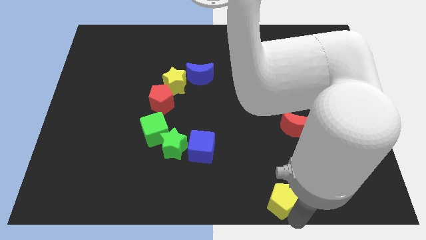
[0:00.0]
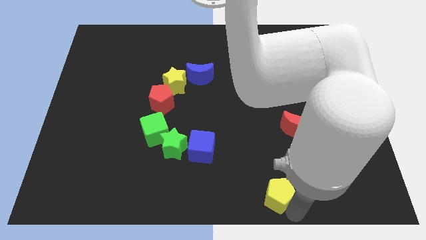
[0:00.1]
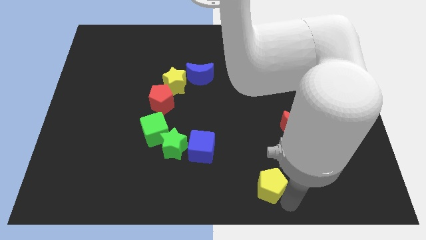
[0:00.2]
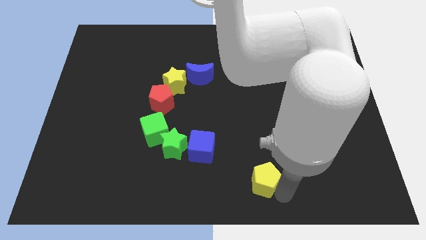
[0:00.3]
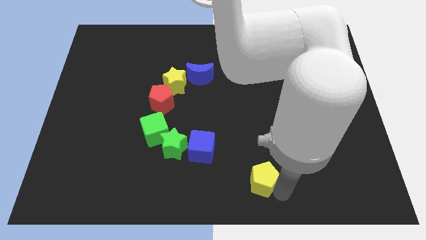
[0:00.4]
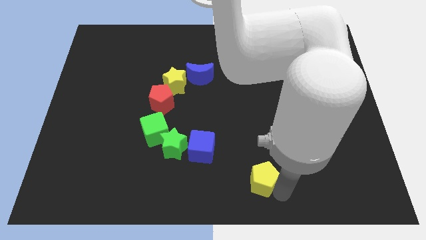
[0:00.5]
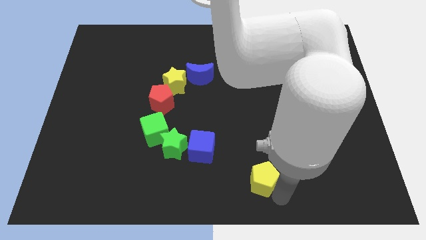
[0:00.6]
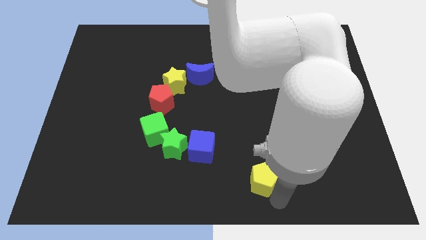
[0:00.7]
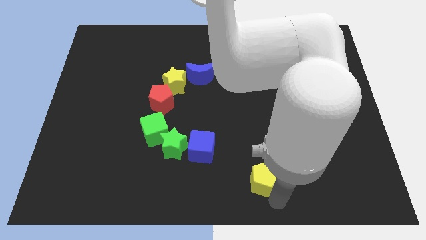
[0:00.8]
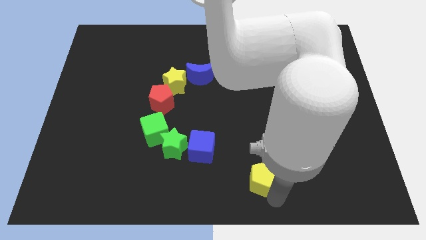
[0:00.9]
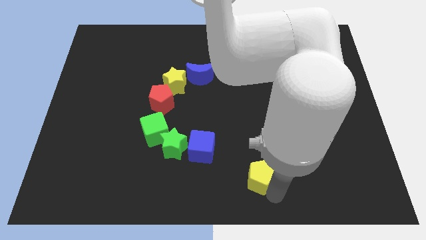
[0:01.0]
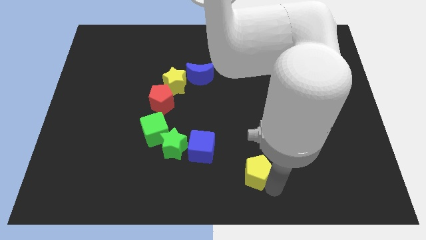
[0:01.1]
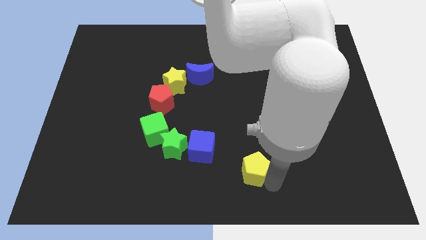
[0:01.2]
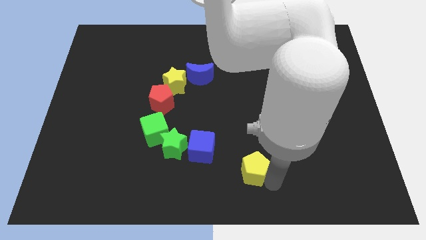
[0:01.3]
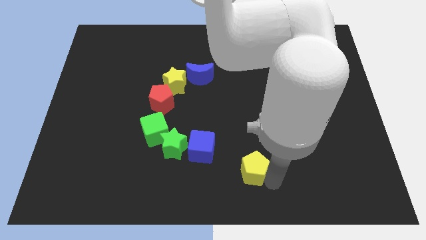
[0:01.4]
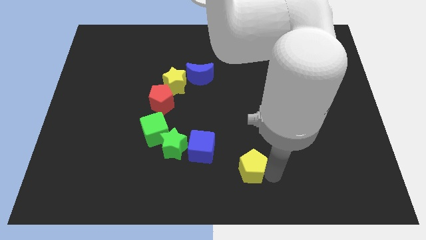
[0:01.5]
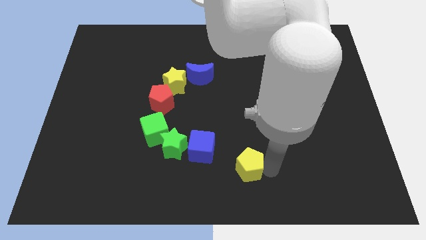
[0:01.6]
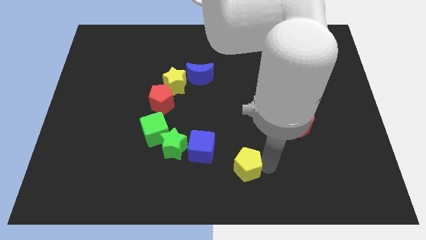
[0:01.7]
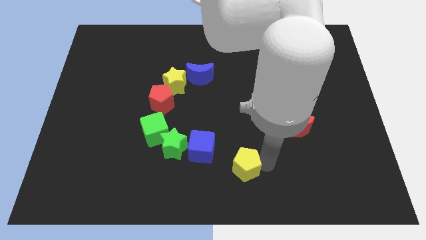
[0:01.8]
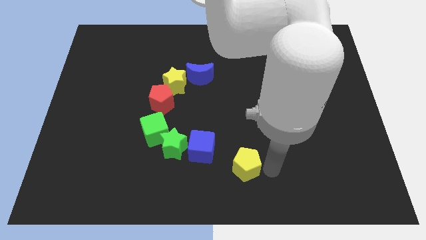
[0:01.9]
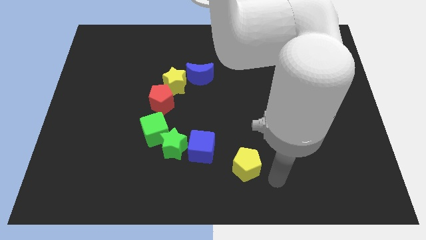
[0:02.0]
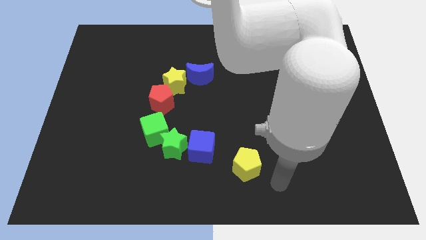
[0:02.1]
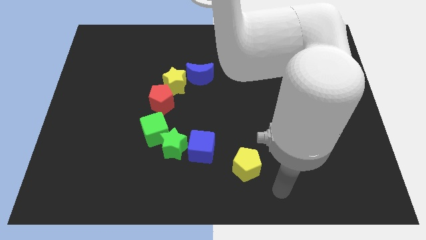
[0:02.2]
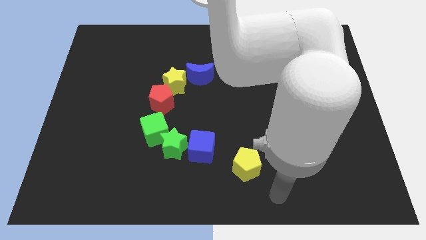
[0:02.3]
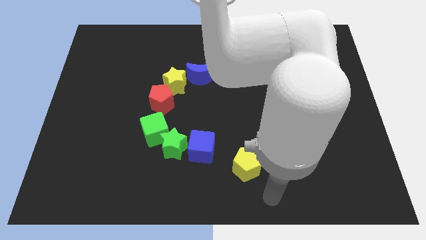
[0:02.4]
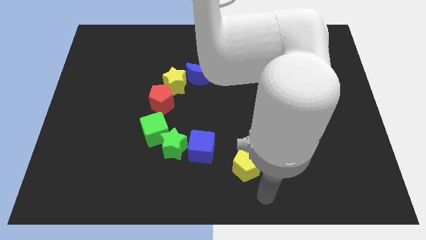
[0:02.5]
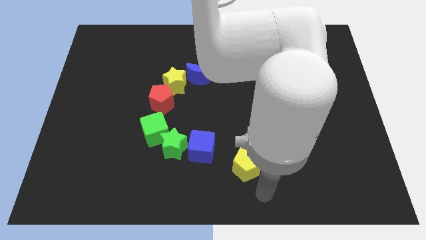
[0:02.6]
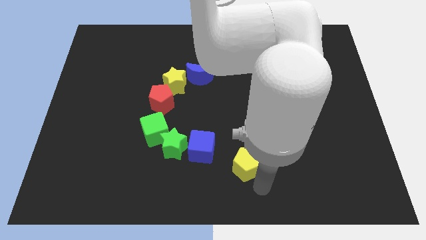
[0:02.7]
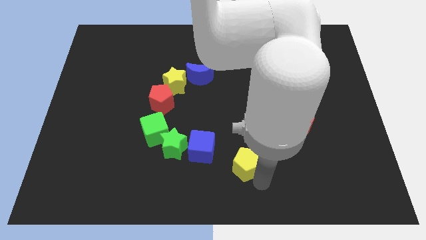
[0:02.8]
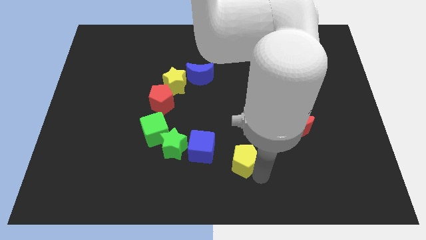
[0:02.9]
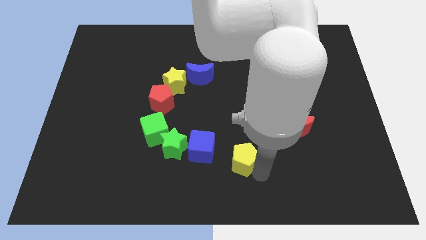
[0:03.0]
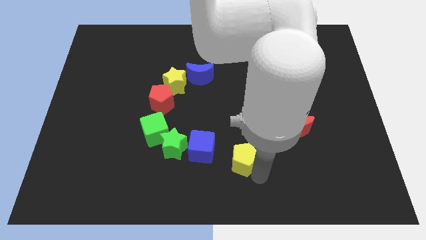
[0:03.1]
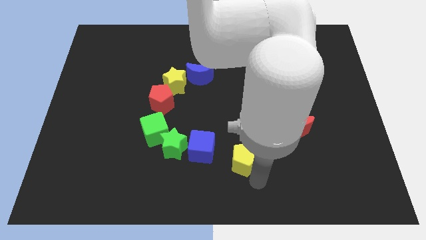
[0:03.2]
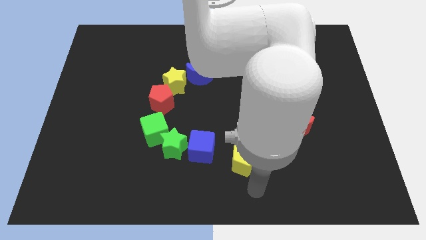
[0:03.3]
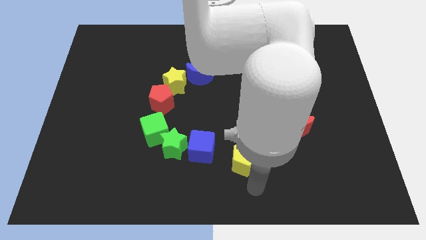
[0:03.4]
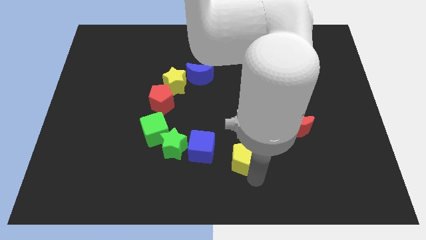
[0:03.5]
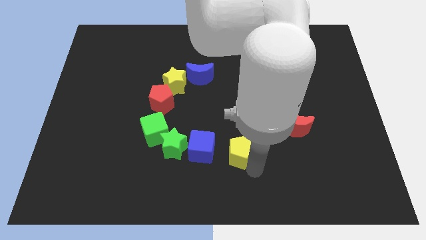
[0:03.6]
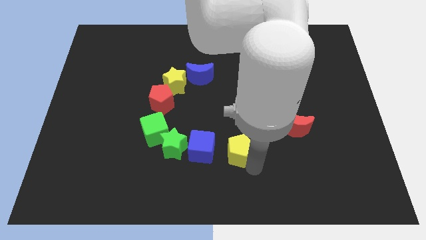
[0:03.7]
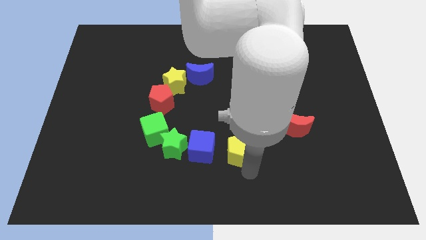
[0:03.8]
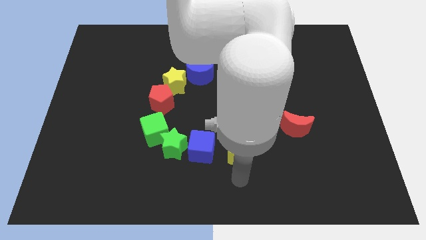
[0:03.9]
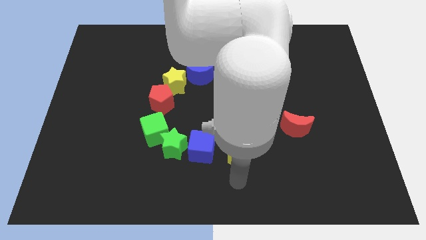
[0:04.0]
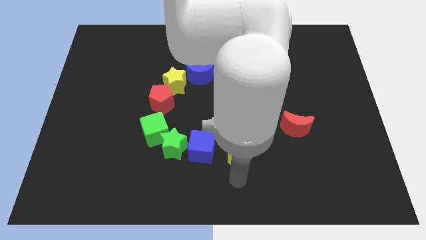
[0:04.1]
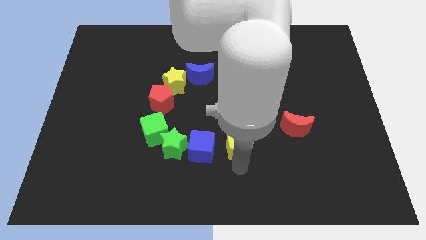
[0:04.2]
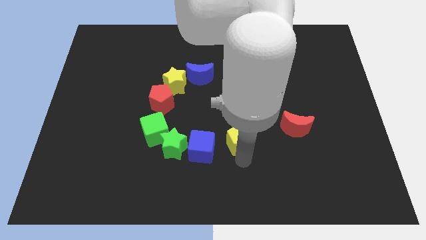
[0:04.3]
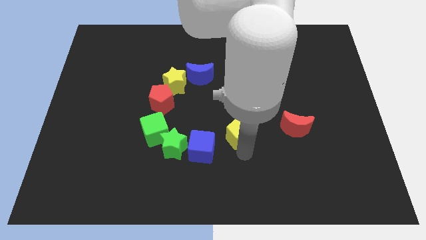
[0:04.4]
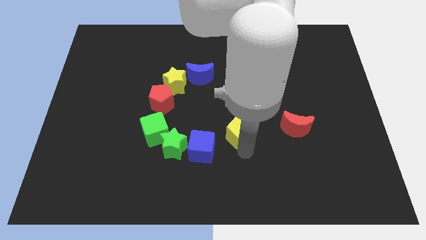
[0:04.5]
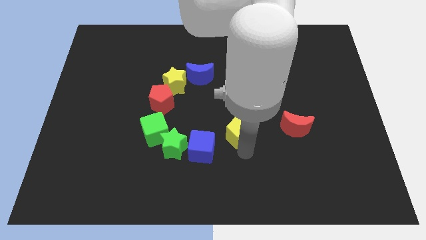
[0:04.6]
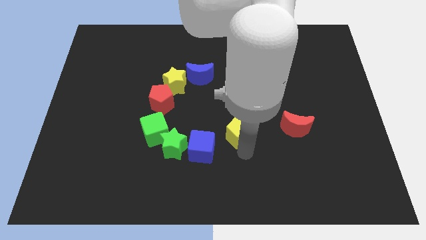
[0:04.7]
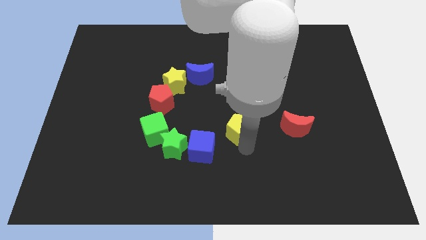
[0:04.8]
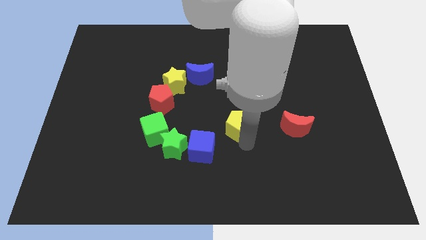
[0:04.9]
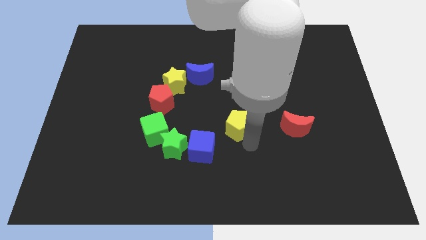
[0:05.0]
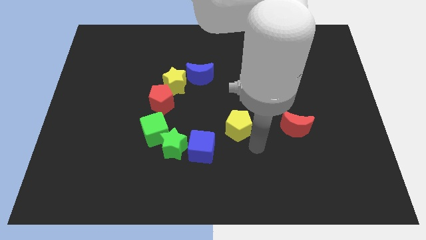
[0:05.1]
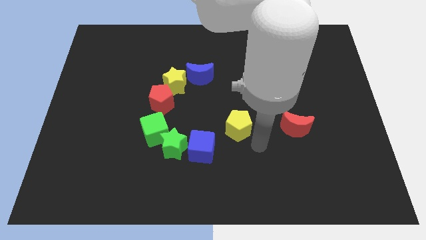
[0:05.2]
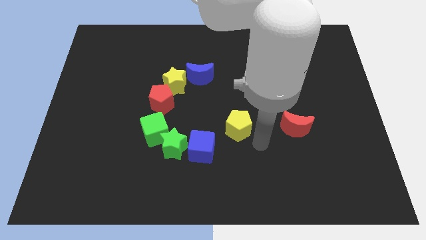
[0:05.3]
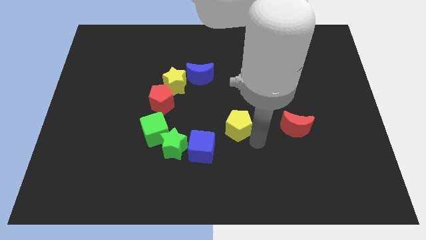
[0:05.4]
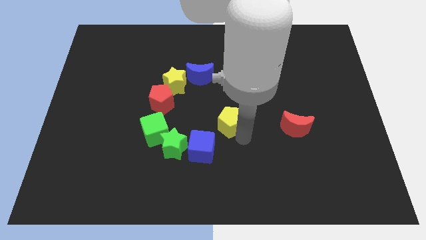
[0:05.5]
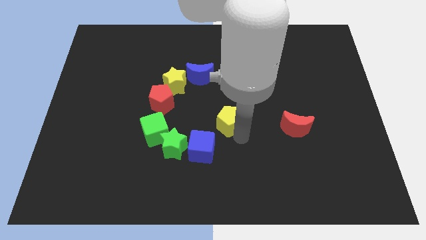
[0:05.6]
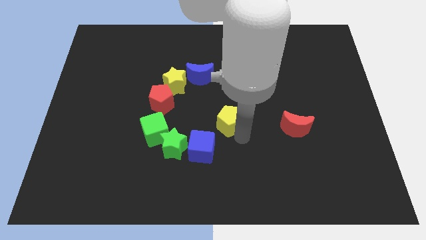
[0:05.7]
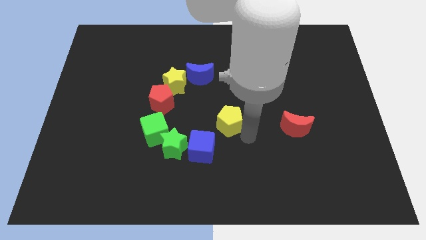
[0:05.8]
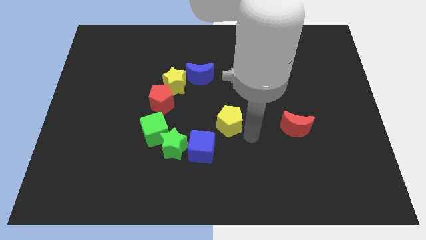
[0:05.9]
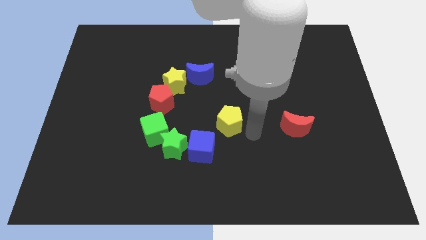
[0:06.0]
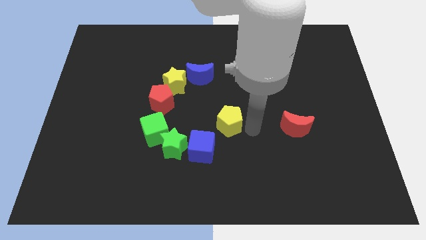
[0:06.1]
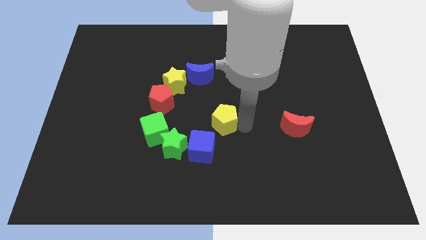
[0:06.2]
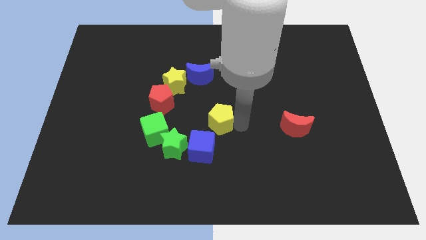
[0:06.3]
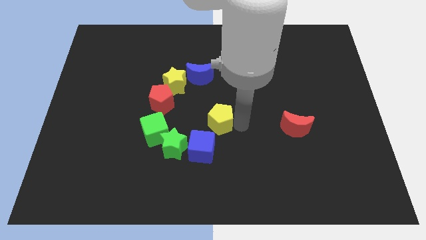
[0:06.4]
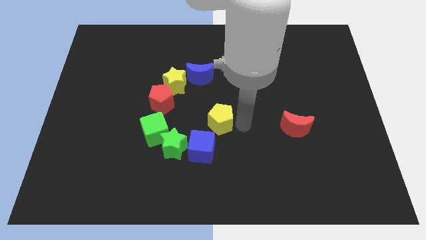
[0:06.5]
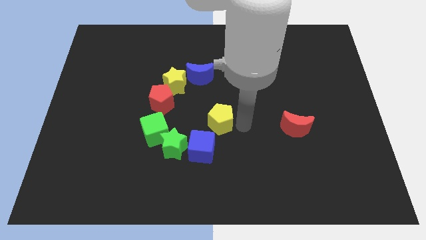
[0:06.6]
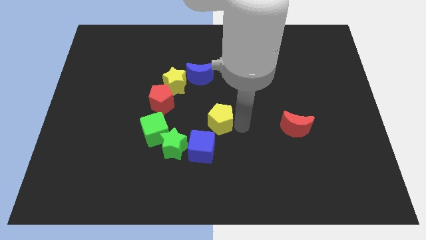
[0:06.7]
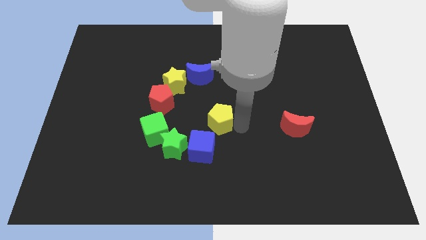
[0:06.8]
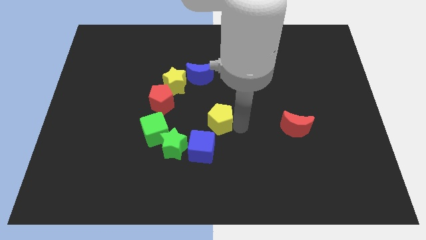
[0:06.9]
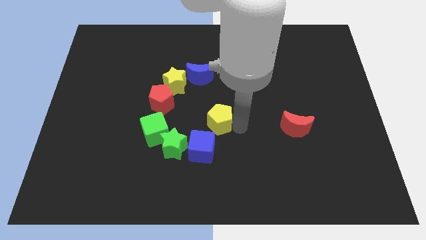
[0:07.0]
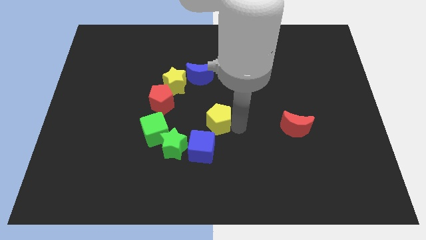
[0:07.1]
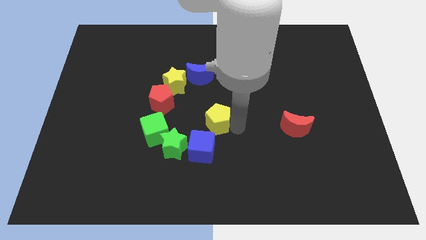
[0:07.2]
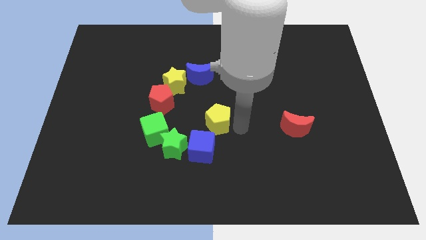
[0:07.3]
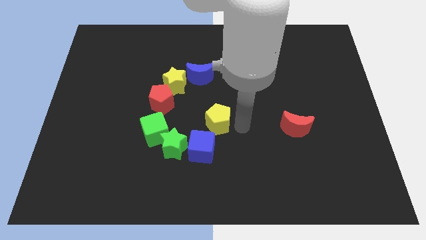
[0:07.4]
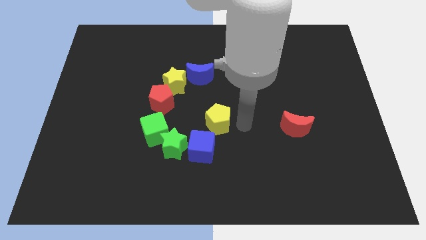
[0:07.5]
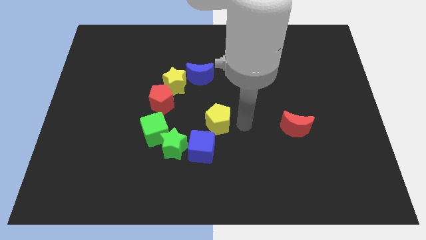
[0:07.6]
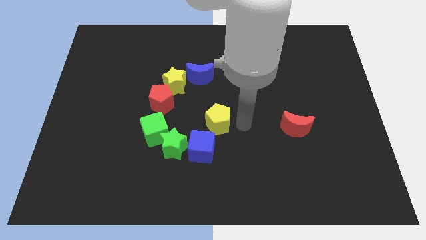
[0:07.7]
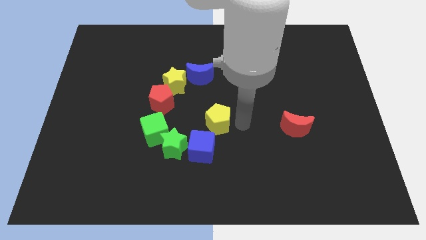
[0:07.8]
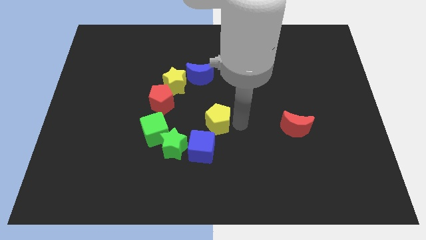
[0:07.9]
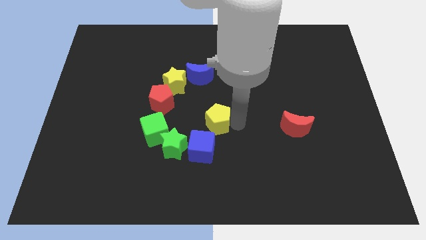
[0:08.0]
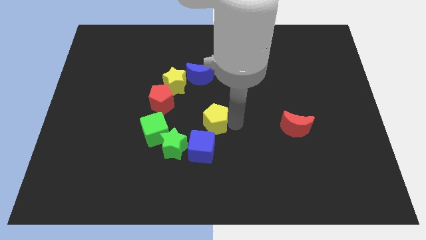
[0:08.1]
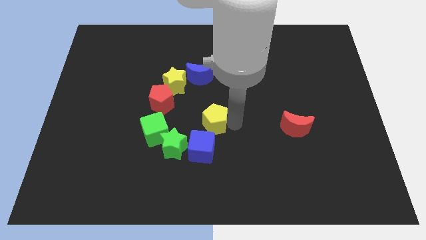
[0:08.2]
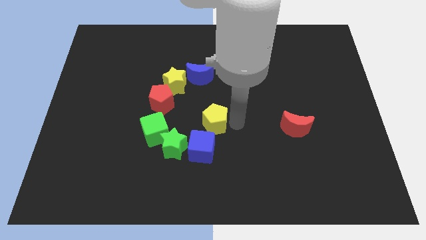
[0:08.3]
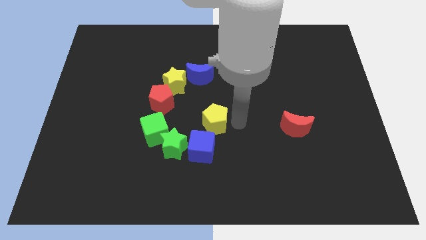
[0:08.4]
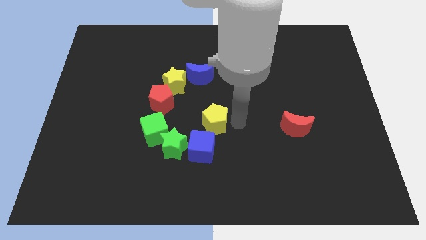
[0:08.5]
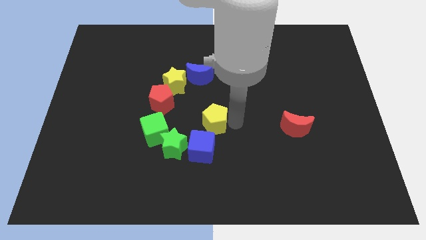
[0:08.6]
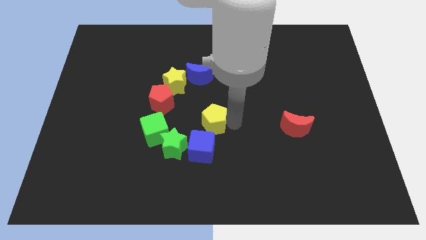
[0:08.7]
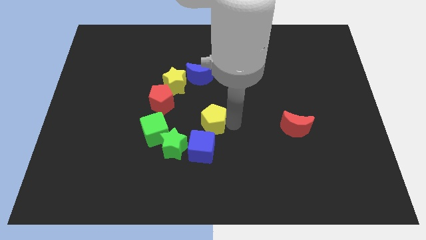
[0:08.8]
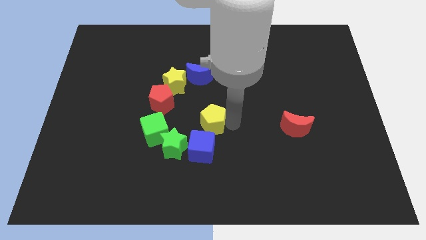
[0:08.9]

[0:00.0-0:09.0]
place the yellow pentagon above the blue cube
